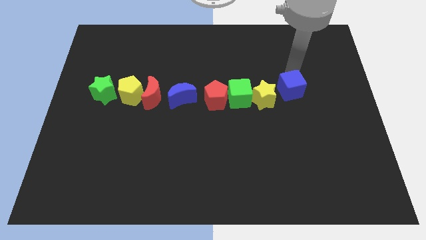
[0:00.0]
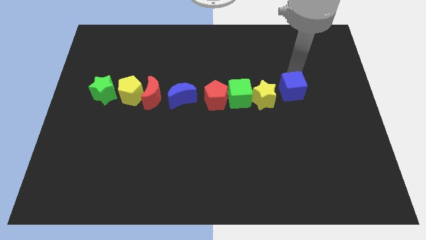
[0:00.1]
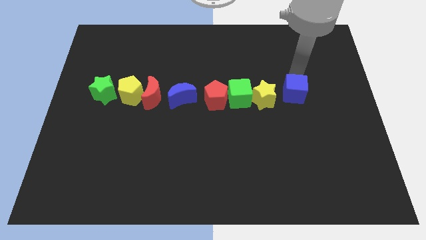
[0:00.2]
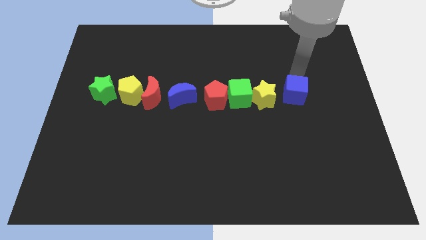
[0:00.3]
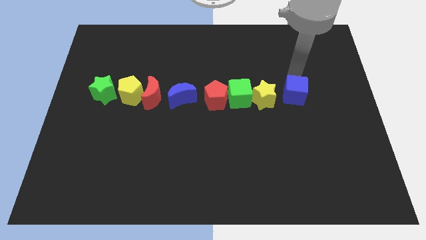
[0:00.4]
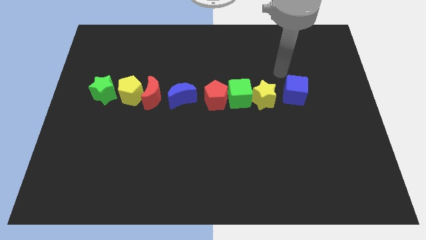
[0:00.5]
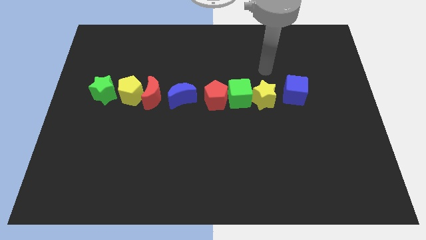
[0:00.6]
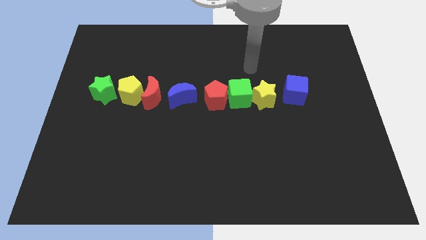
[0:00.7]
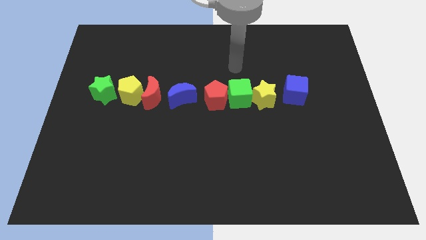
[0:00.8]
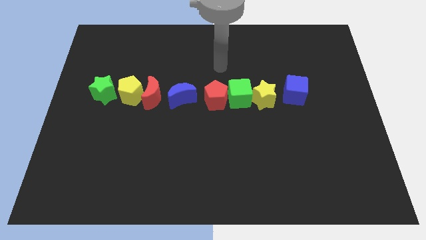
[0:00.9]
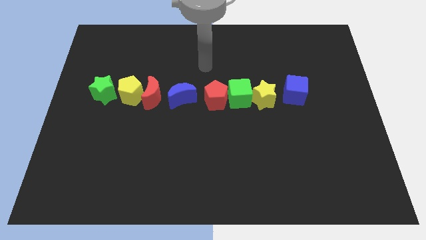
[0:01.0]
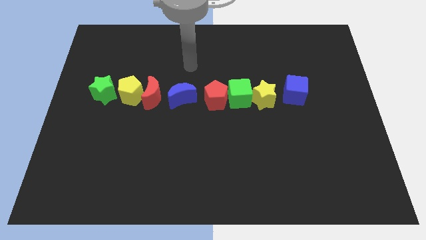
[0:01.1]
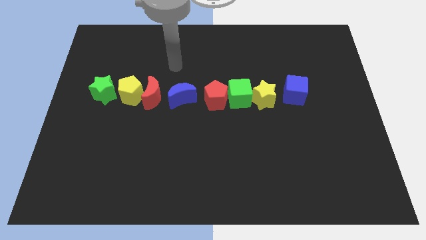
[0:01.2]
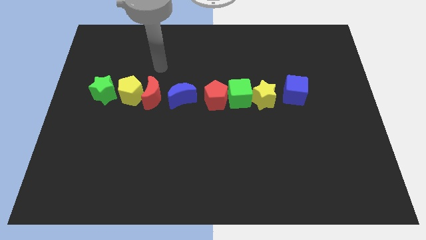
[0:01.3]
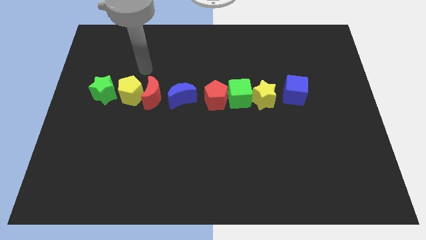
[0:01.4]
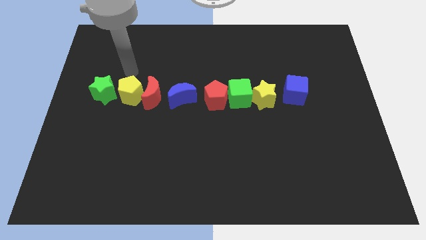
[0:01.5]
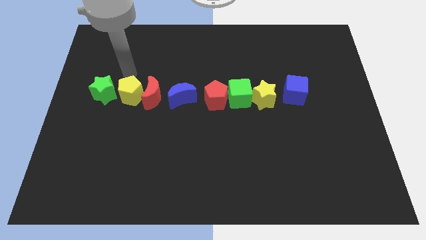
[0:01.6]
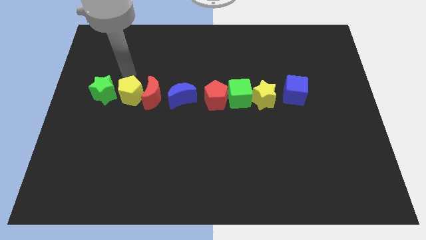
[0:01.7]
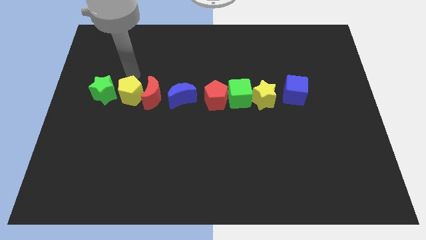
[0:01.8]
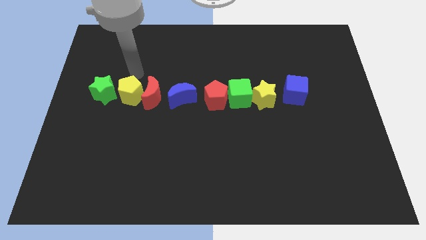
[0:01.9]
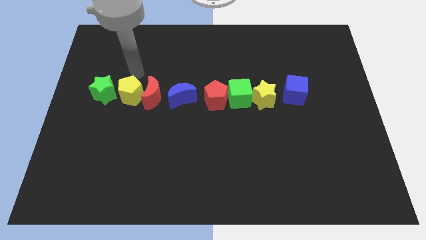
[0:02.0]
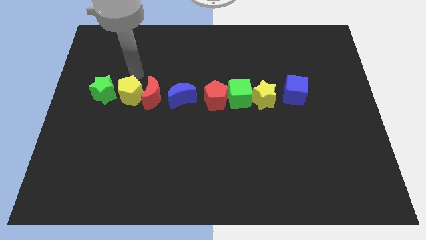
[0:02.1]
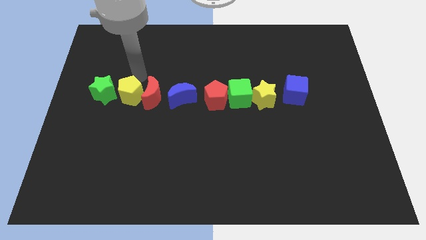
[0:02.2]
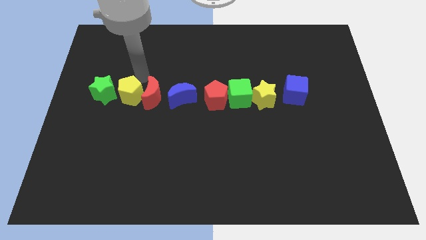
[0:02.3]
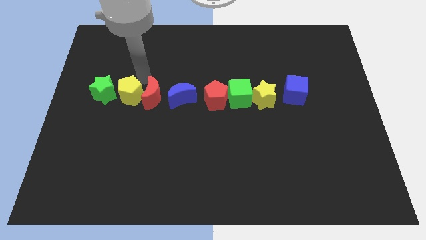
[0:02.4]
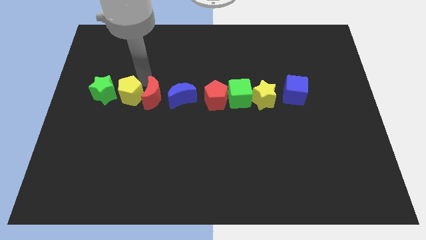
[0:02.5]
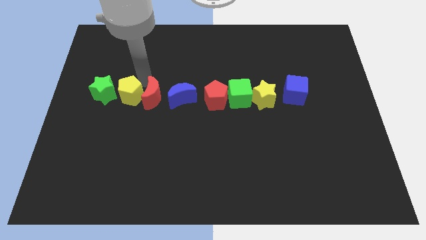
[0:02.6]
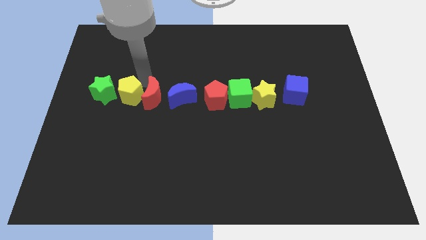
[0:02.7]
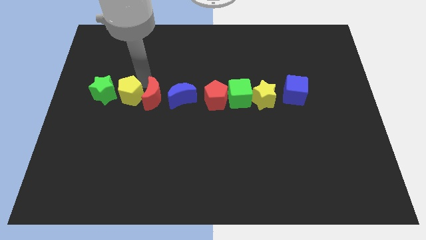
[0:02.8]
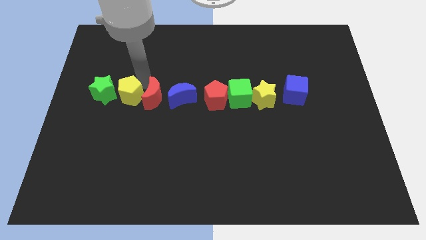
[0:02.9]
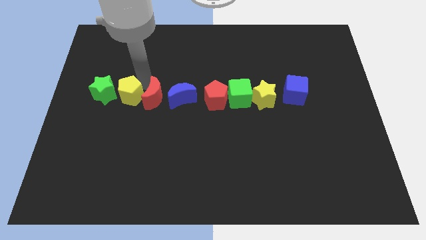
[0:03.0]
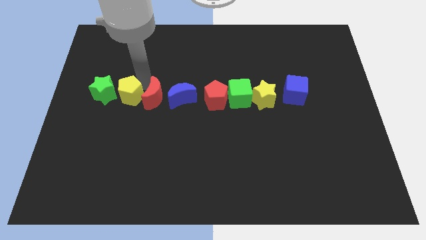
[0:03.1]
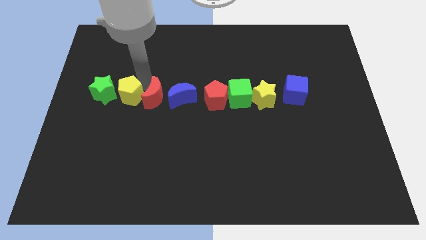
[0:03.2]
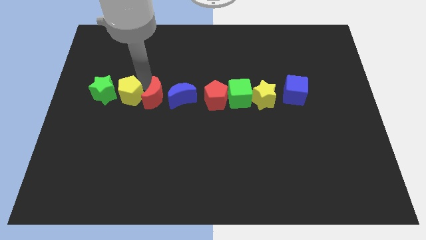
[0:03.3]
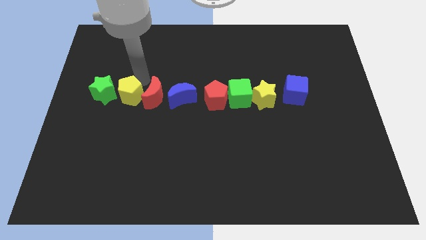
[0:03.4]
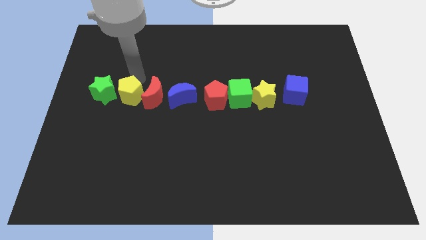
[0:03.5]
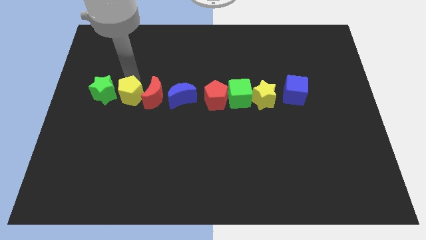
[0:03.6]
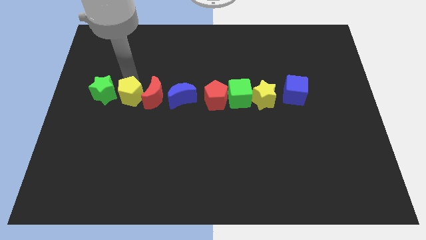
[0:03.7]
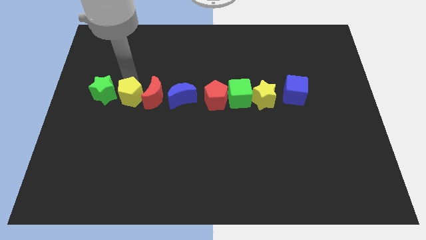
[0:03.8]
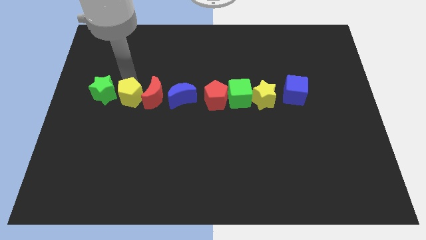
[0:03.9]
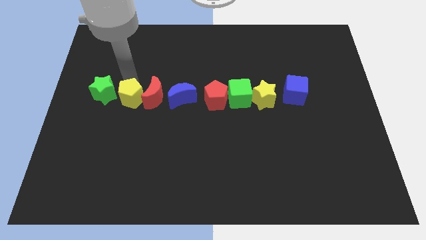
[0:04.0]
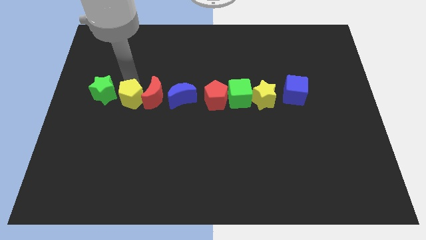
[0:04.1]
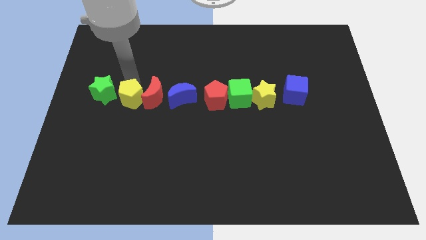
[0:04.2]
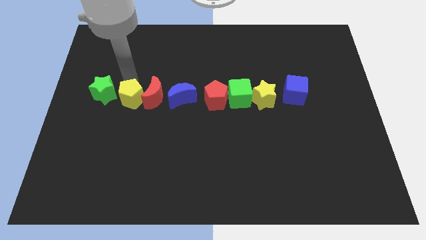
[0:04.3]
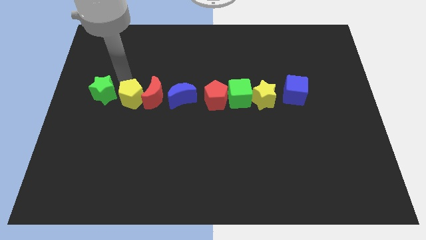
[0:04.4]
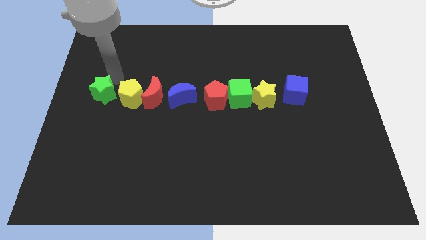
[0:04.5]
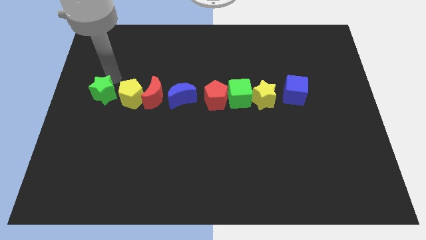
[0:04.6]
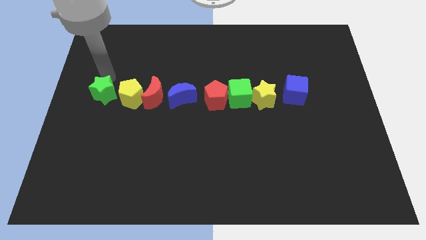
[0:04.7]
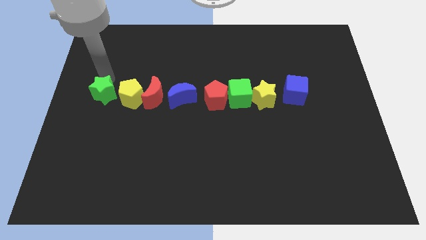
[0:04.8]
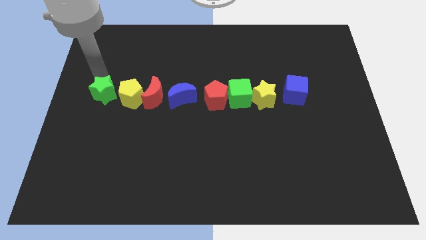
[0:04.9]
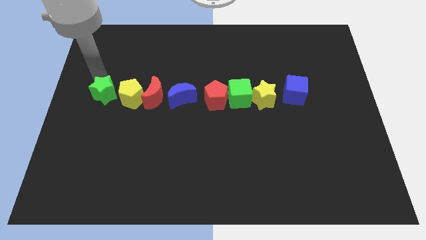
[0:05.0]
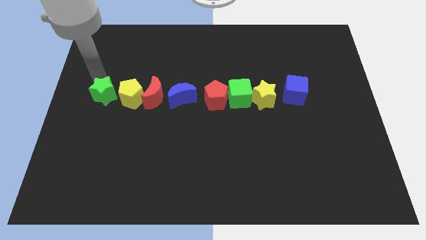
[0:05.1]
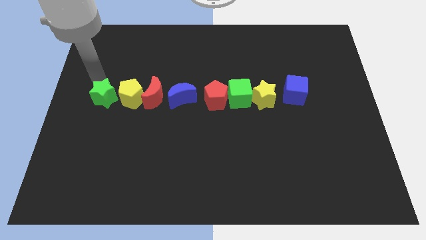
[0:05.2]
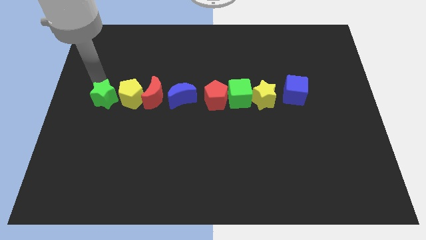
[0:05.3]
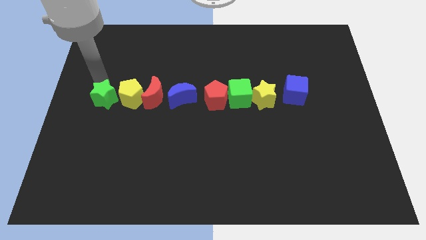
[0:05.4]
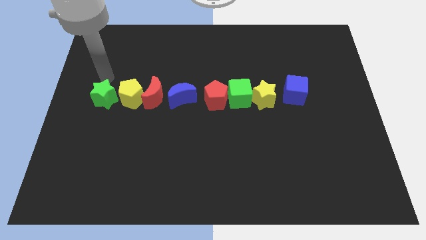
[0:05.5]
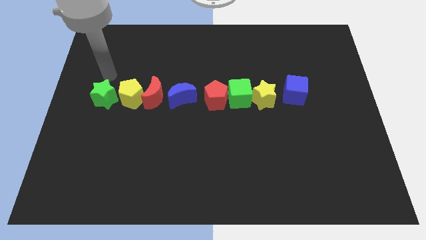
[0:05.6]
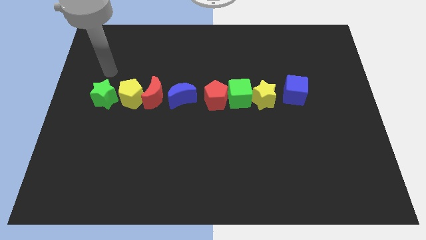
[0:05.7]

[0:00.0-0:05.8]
adjust the group of blocks to form a horizontal line

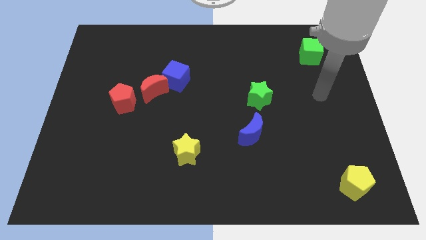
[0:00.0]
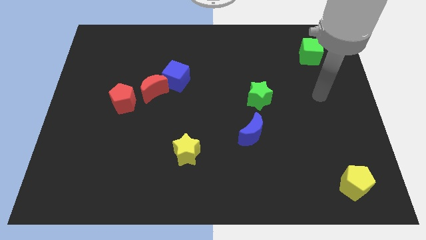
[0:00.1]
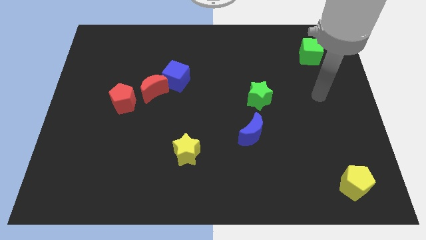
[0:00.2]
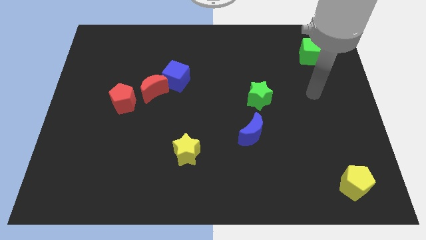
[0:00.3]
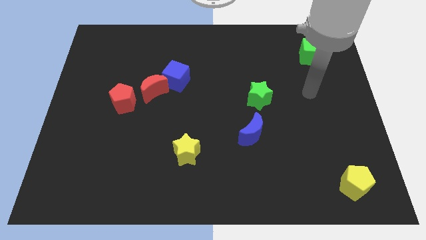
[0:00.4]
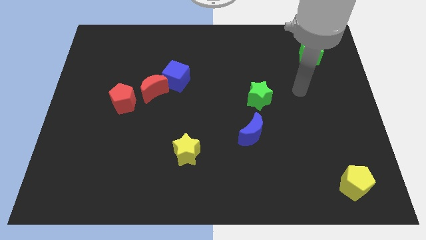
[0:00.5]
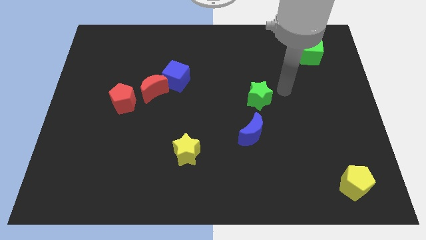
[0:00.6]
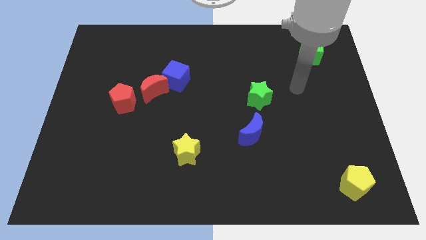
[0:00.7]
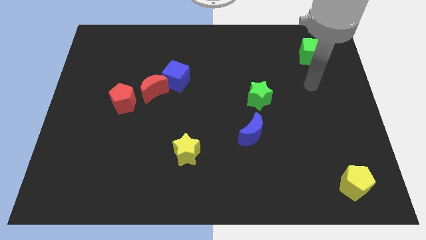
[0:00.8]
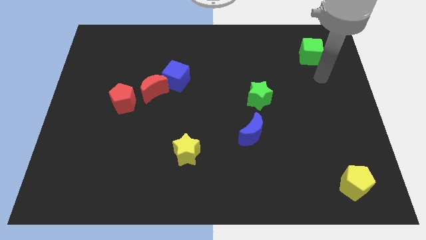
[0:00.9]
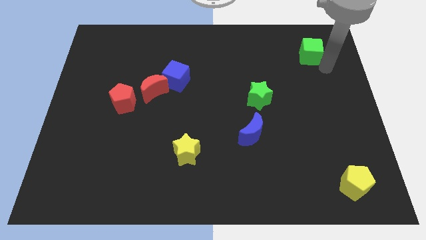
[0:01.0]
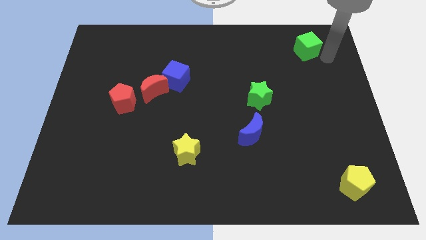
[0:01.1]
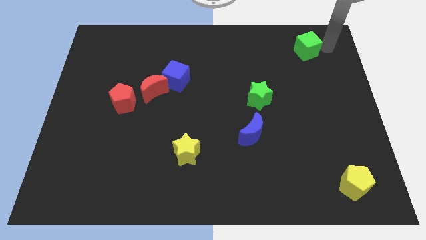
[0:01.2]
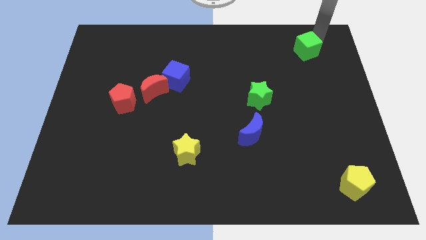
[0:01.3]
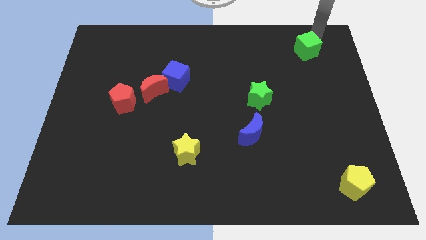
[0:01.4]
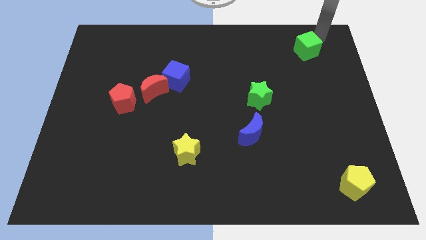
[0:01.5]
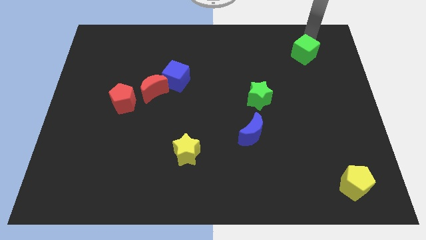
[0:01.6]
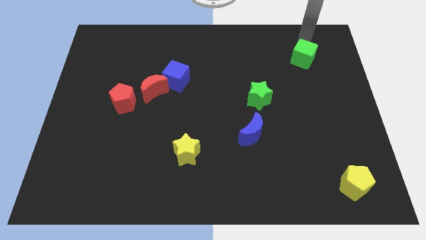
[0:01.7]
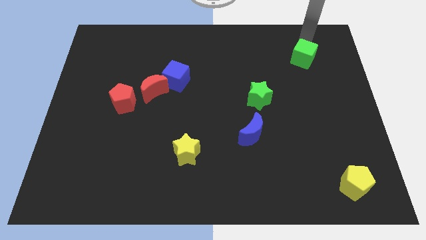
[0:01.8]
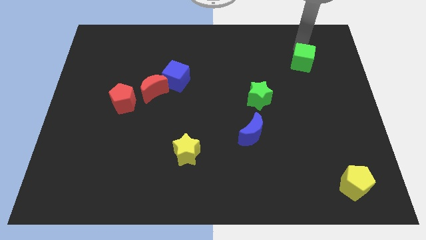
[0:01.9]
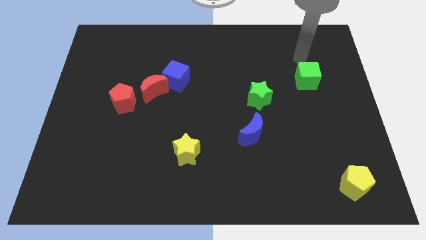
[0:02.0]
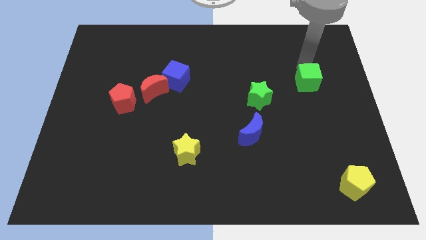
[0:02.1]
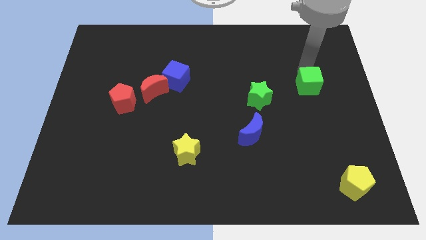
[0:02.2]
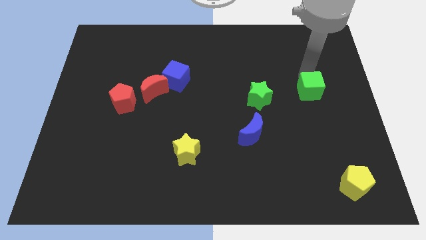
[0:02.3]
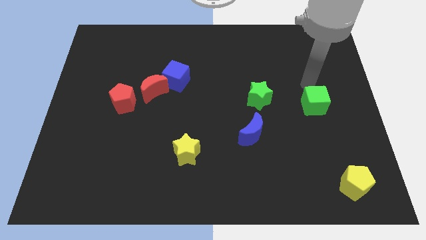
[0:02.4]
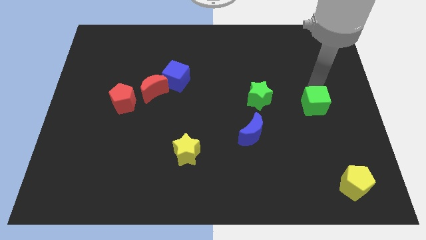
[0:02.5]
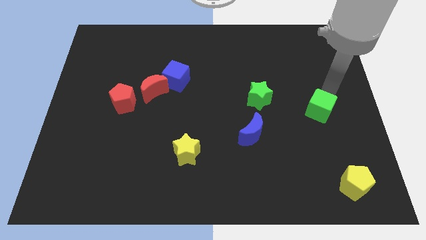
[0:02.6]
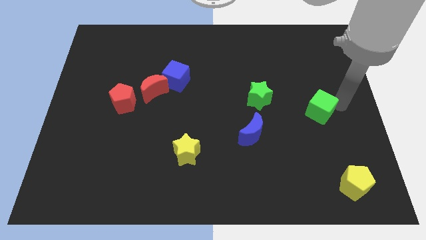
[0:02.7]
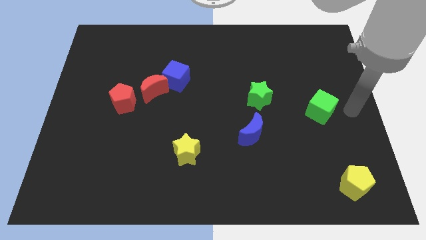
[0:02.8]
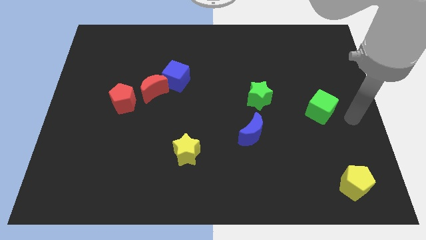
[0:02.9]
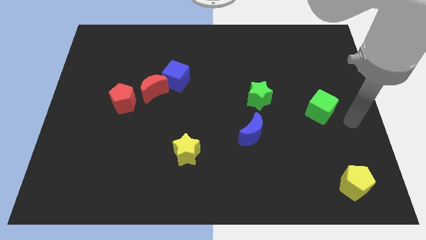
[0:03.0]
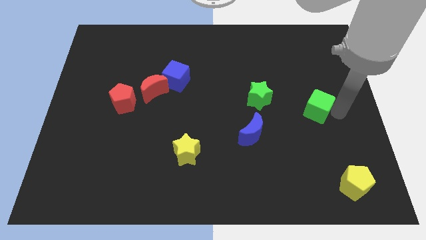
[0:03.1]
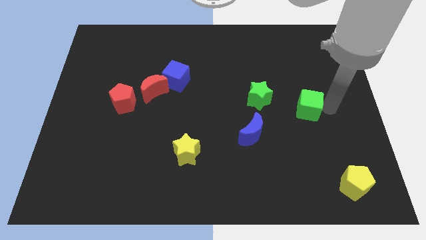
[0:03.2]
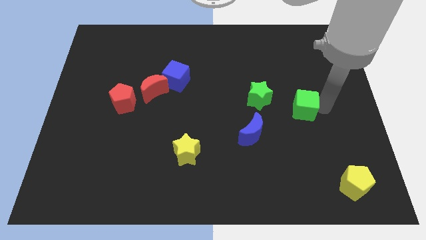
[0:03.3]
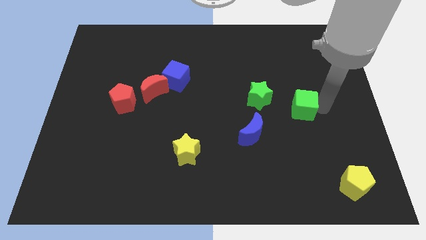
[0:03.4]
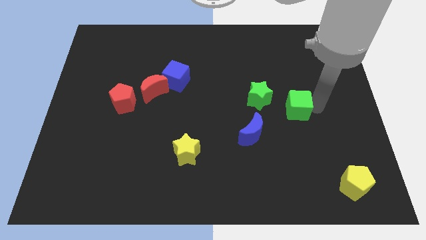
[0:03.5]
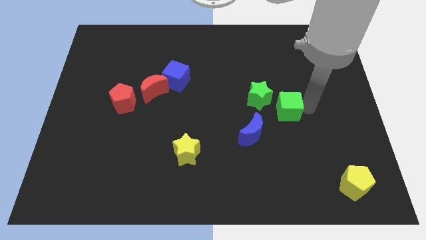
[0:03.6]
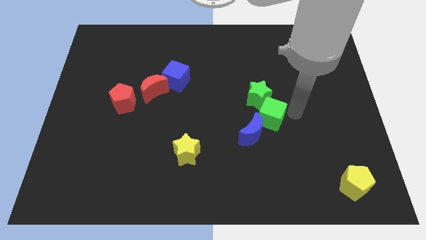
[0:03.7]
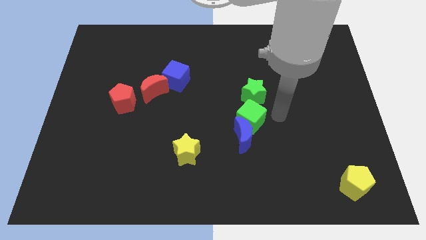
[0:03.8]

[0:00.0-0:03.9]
place the green cube in between the green star and the blue moon
